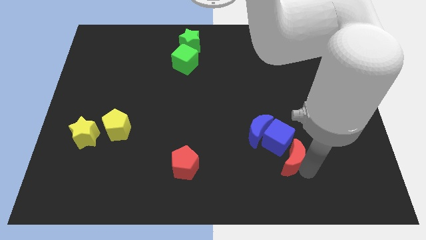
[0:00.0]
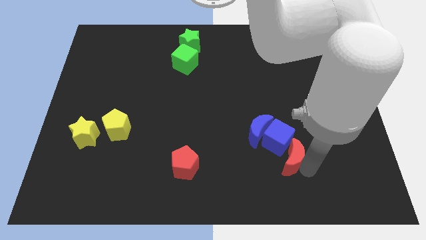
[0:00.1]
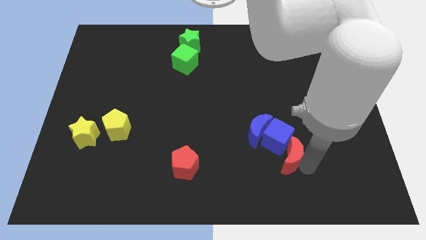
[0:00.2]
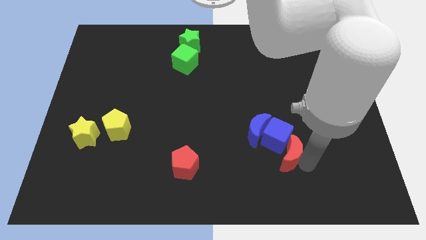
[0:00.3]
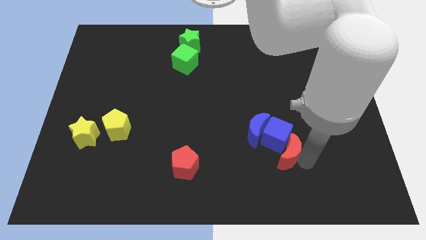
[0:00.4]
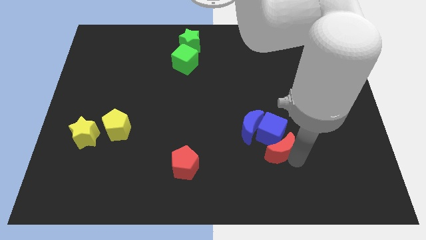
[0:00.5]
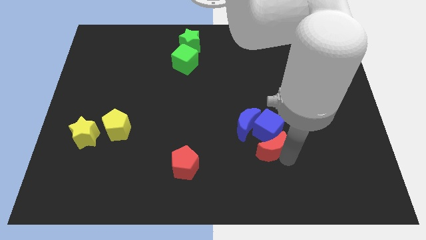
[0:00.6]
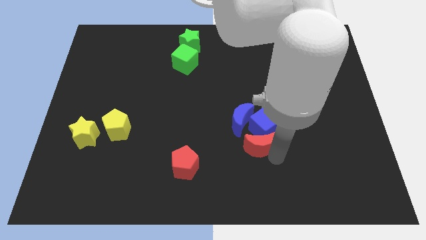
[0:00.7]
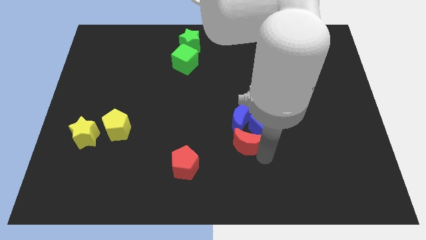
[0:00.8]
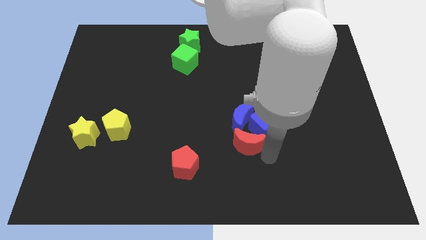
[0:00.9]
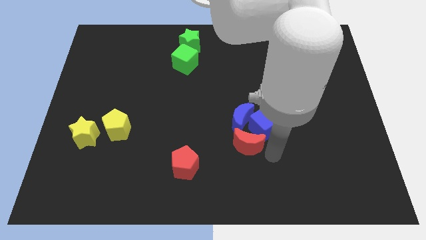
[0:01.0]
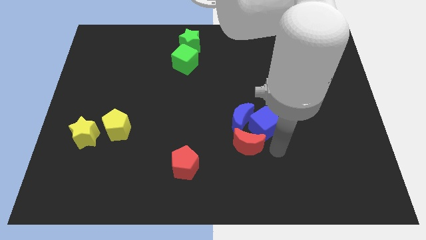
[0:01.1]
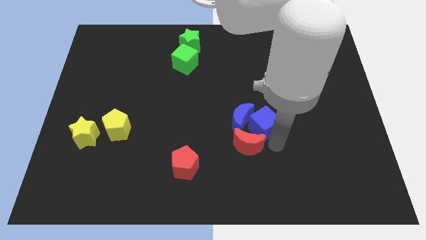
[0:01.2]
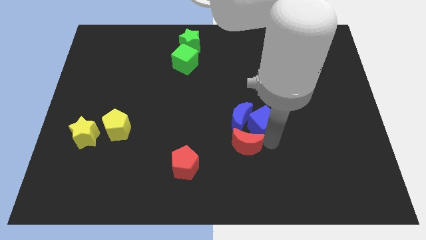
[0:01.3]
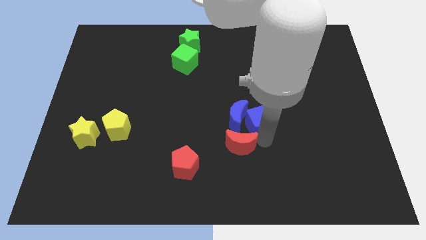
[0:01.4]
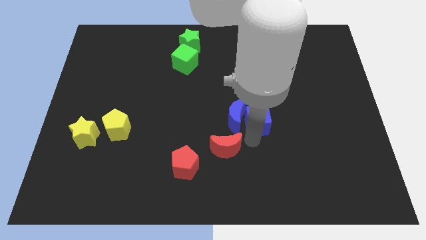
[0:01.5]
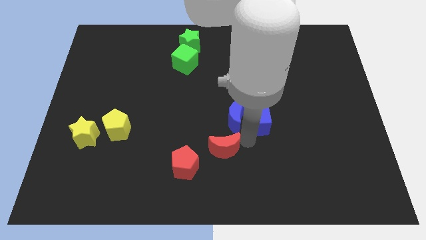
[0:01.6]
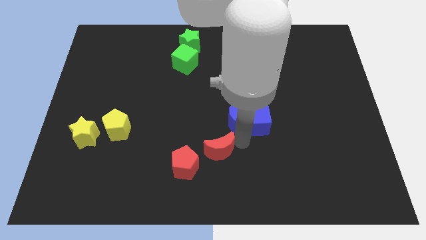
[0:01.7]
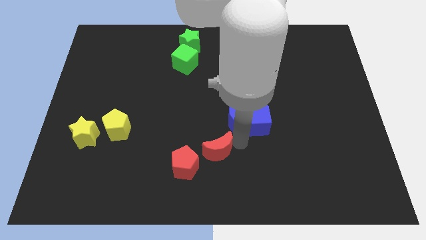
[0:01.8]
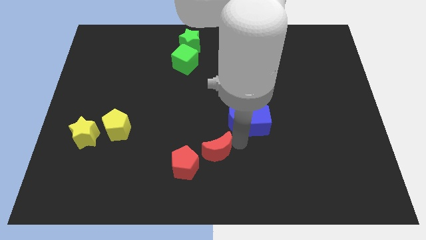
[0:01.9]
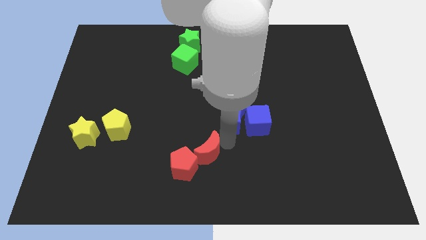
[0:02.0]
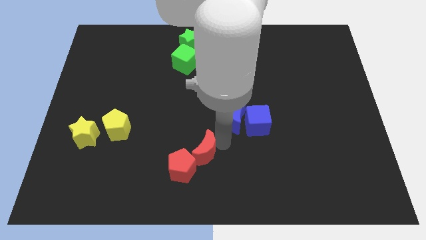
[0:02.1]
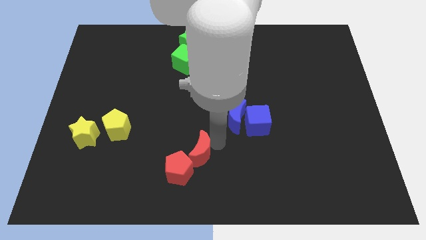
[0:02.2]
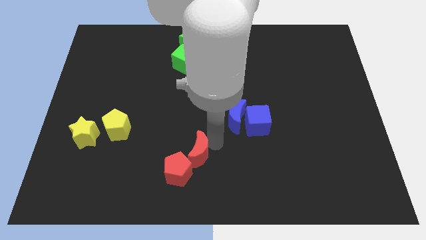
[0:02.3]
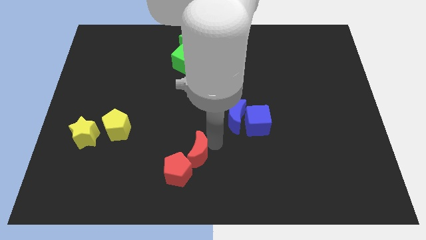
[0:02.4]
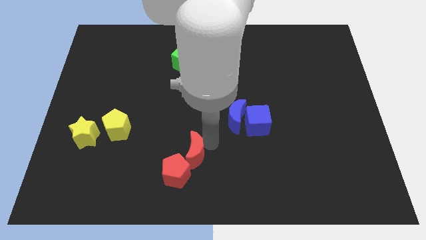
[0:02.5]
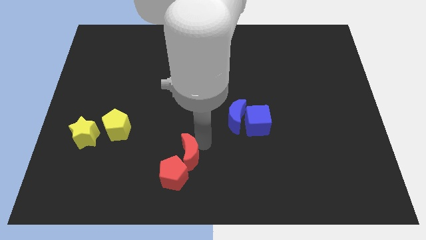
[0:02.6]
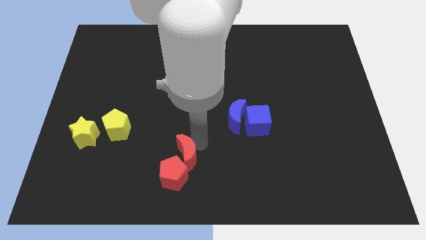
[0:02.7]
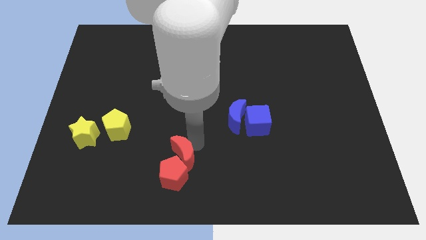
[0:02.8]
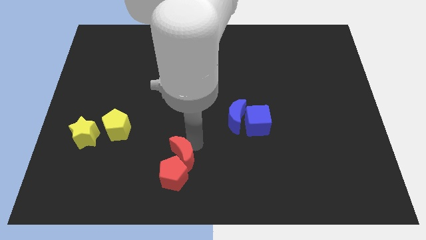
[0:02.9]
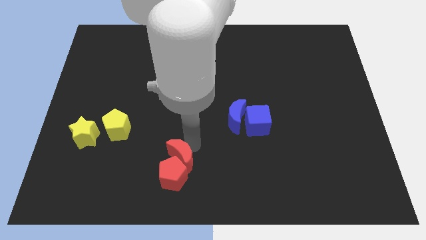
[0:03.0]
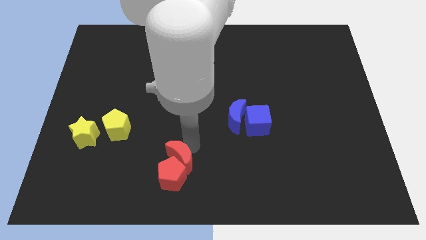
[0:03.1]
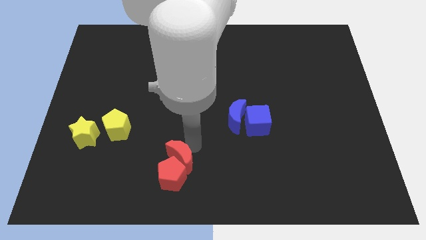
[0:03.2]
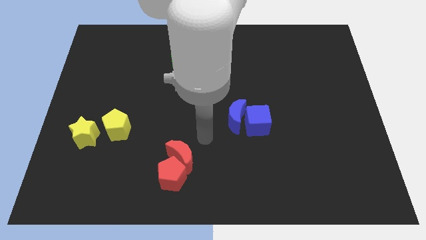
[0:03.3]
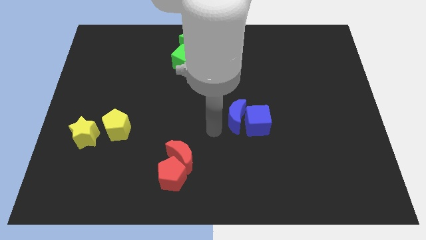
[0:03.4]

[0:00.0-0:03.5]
move the red moon into the red pentagon

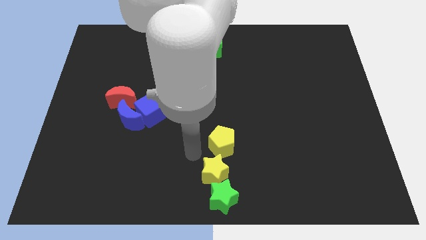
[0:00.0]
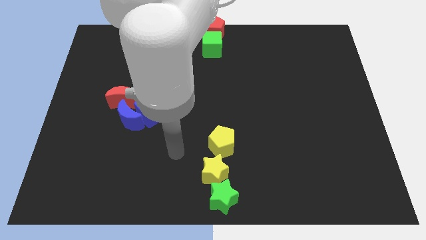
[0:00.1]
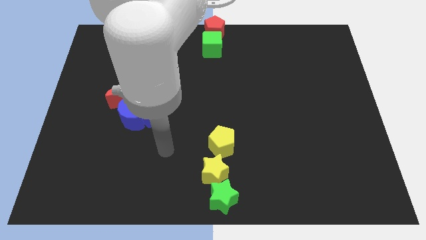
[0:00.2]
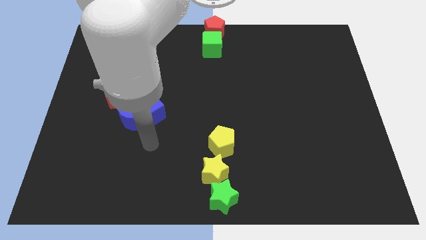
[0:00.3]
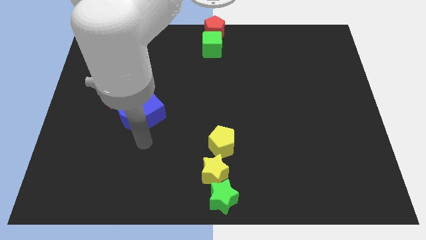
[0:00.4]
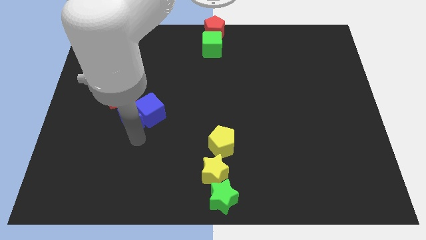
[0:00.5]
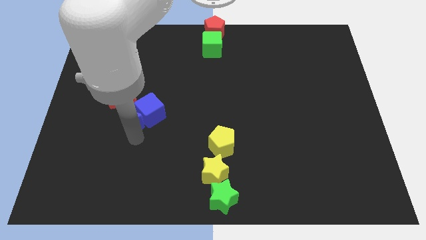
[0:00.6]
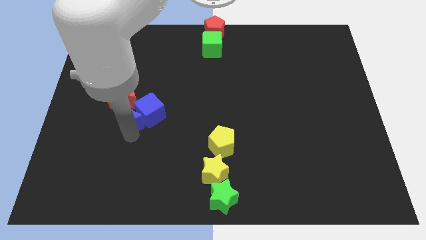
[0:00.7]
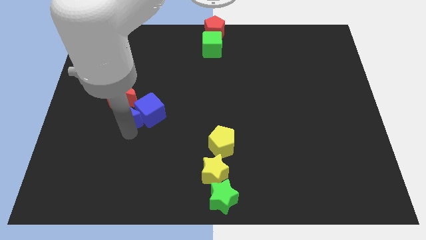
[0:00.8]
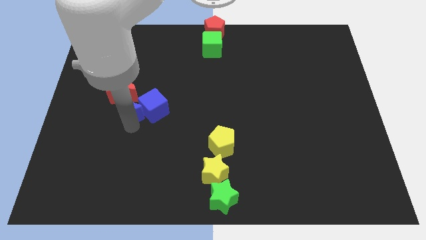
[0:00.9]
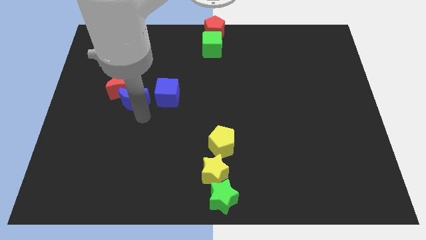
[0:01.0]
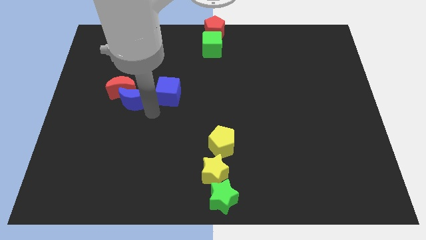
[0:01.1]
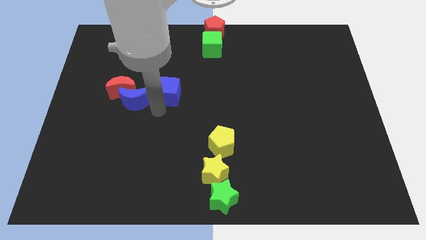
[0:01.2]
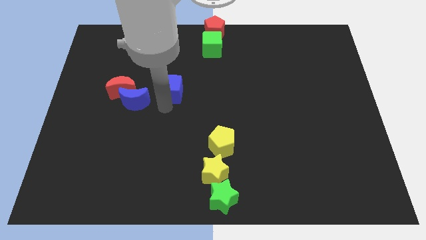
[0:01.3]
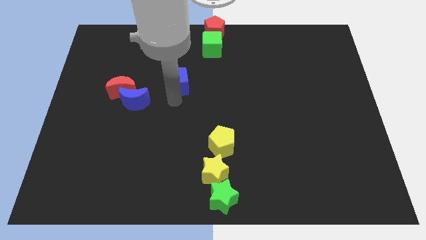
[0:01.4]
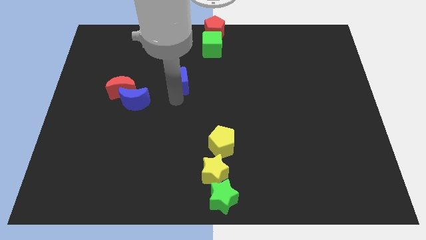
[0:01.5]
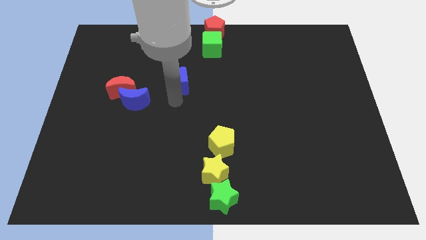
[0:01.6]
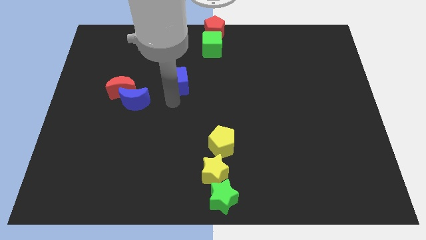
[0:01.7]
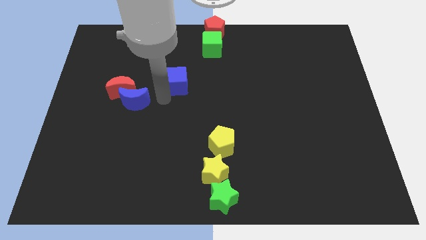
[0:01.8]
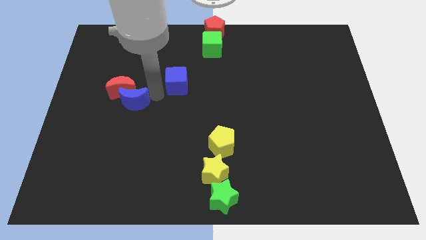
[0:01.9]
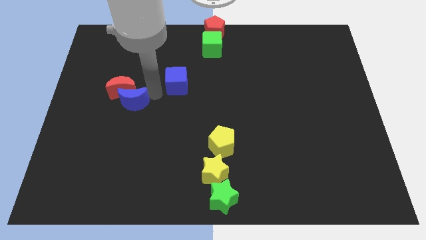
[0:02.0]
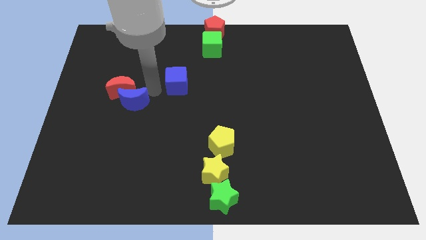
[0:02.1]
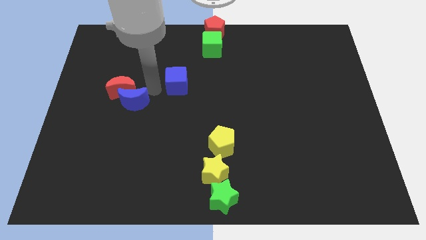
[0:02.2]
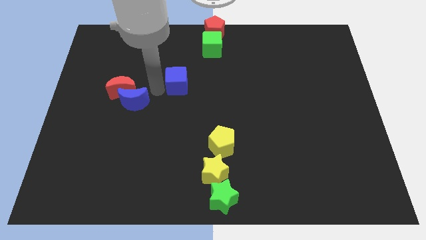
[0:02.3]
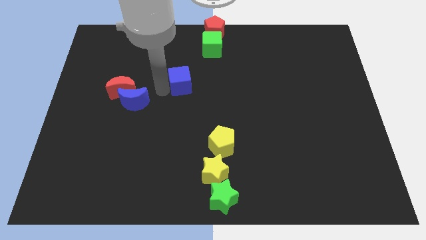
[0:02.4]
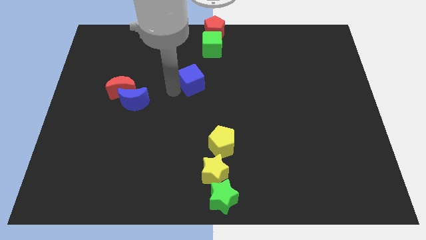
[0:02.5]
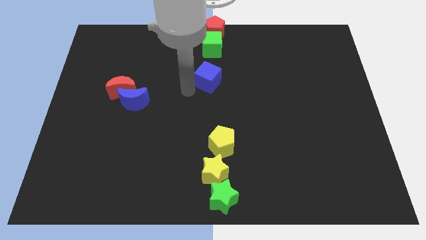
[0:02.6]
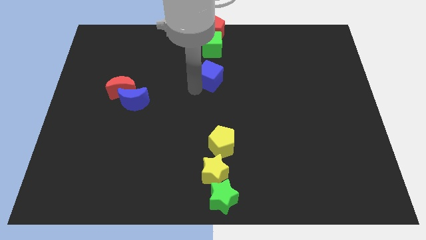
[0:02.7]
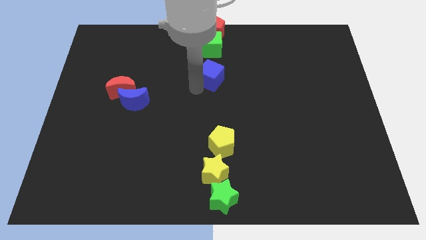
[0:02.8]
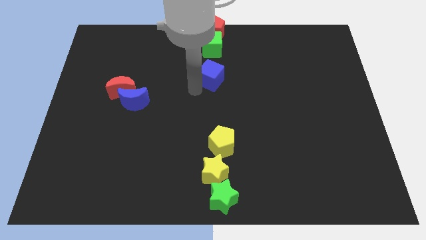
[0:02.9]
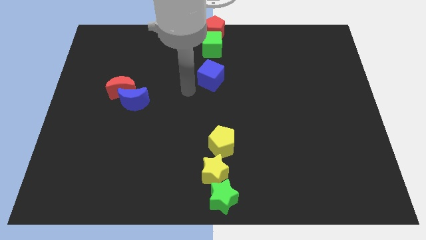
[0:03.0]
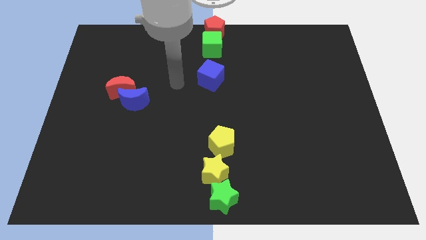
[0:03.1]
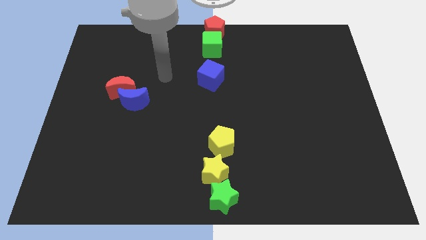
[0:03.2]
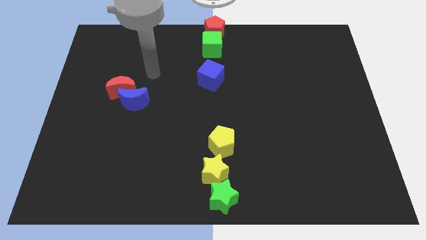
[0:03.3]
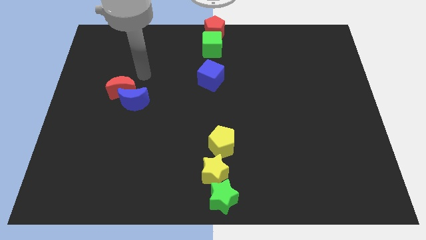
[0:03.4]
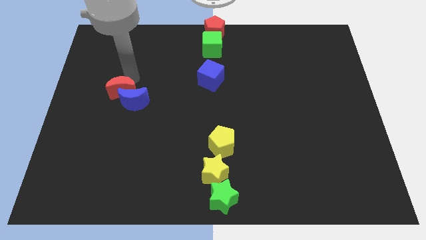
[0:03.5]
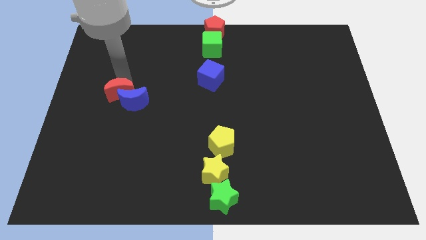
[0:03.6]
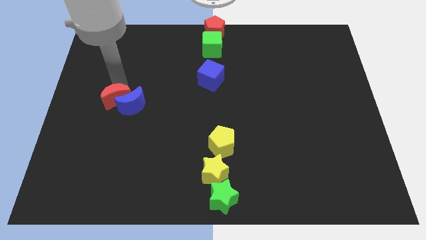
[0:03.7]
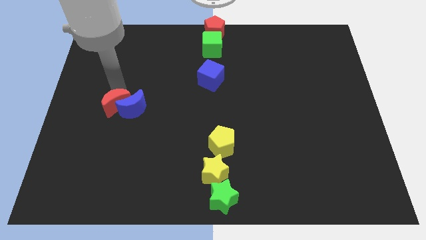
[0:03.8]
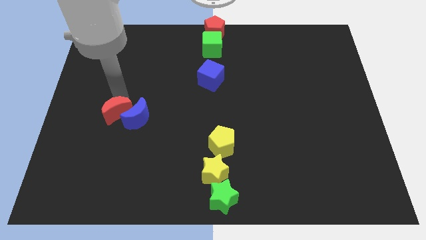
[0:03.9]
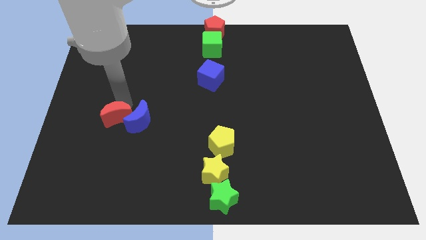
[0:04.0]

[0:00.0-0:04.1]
separate the blue cube from the crescents

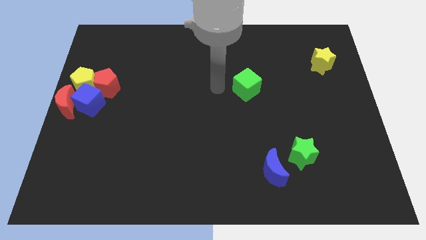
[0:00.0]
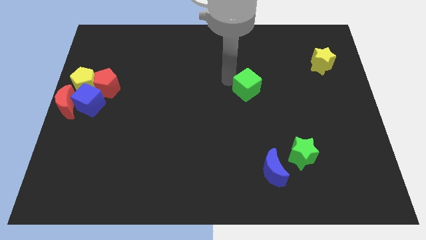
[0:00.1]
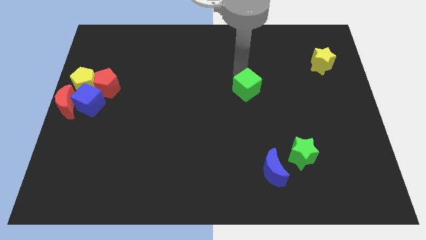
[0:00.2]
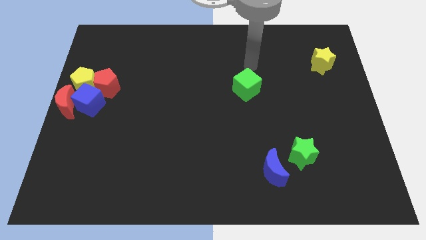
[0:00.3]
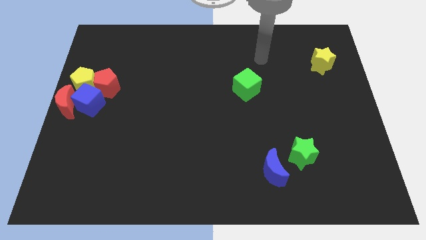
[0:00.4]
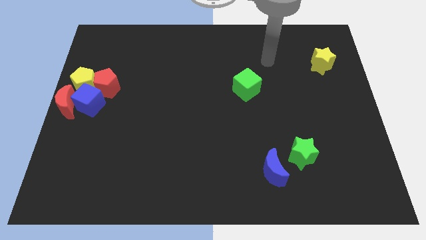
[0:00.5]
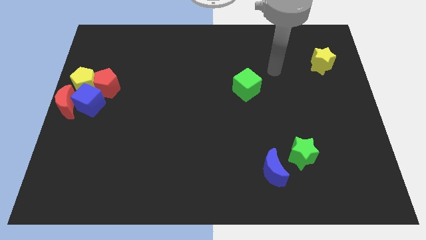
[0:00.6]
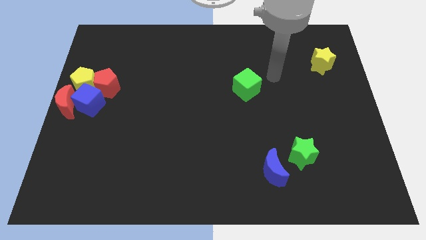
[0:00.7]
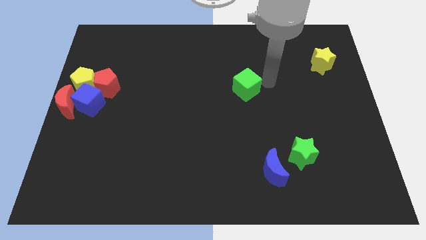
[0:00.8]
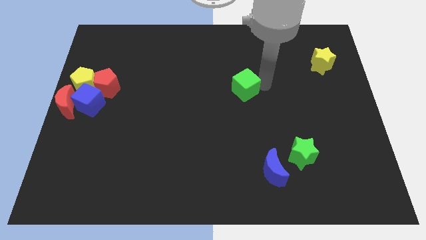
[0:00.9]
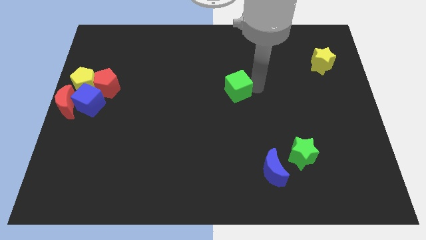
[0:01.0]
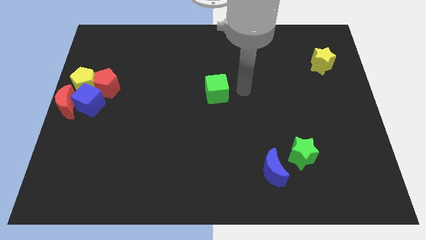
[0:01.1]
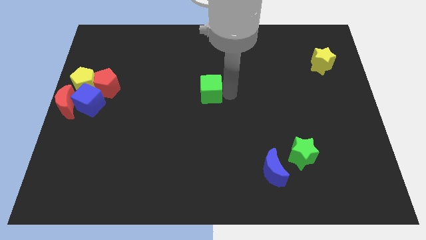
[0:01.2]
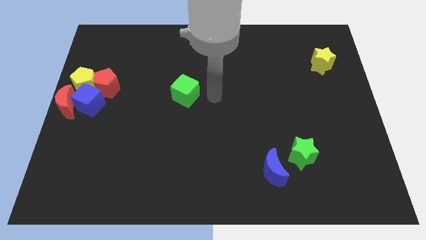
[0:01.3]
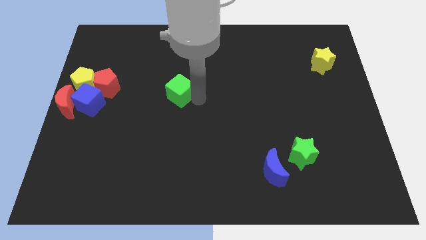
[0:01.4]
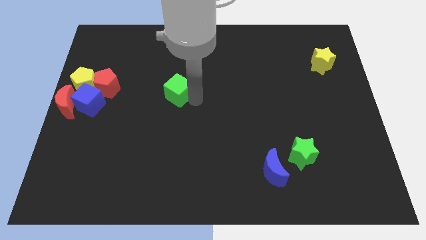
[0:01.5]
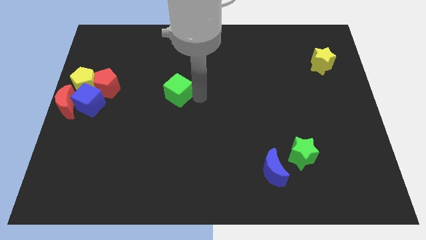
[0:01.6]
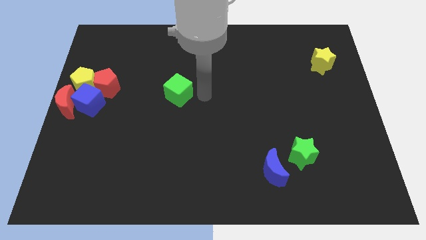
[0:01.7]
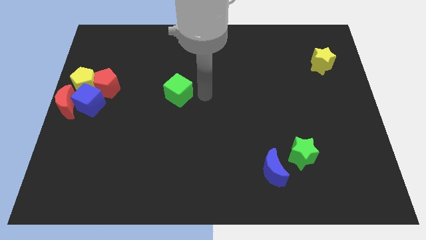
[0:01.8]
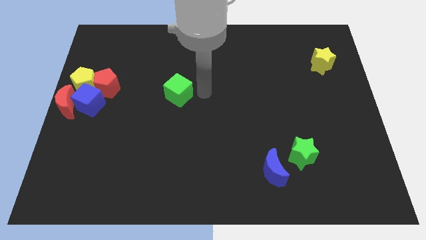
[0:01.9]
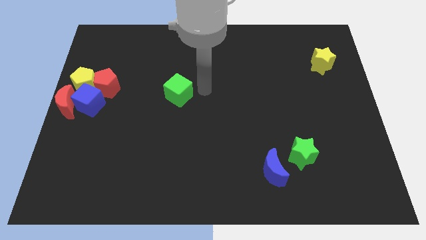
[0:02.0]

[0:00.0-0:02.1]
push the green cube towards left center of the board
